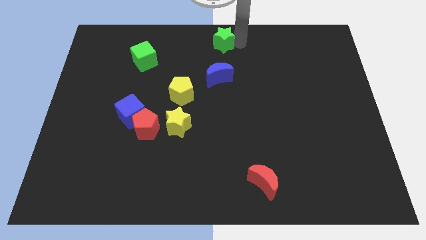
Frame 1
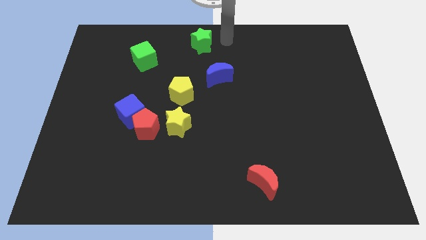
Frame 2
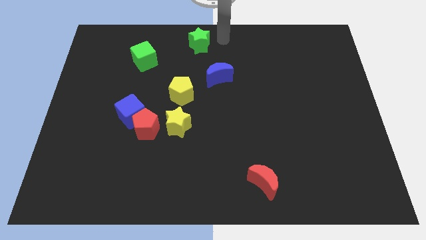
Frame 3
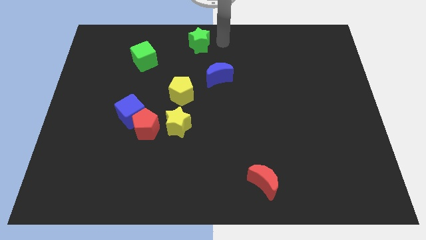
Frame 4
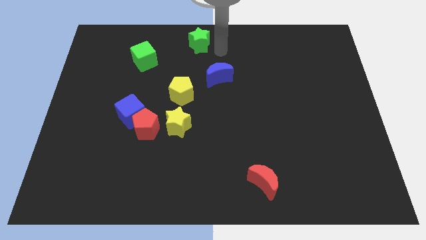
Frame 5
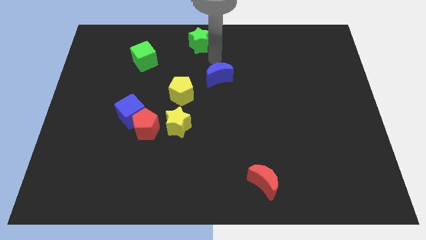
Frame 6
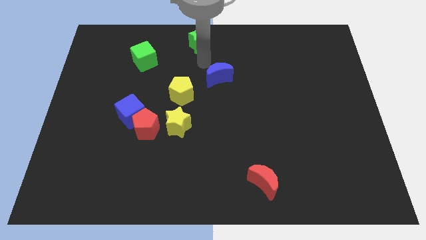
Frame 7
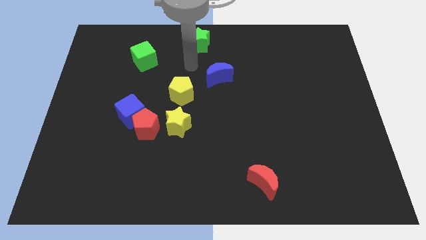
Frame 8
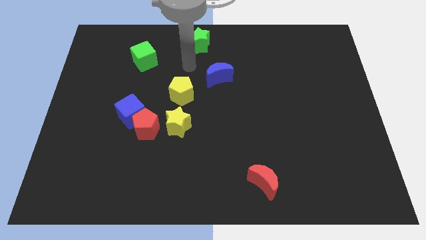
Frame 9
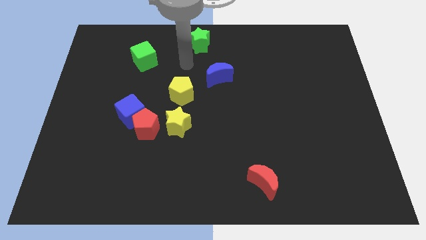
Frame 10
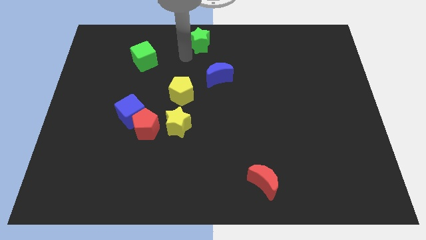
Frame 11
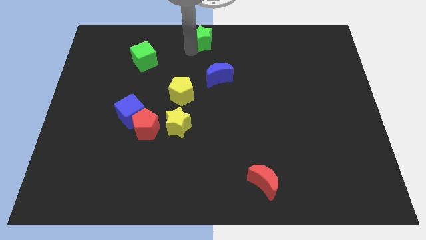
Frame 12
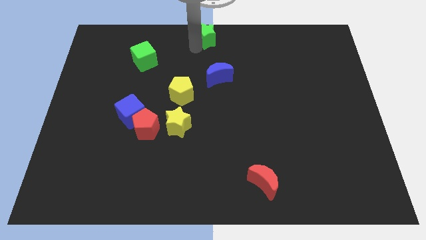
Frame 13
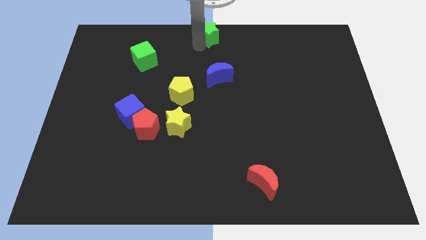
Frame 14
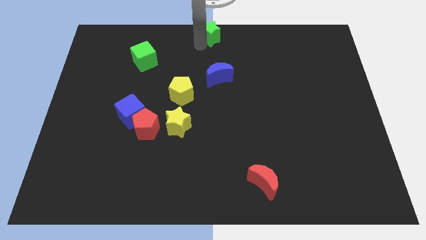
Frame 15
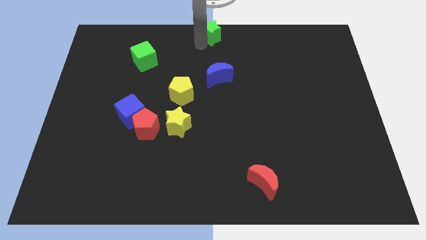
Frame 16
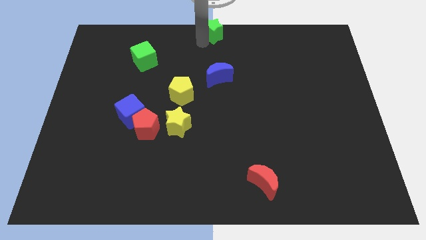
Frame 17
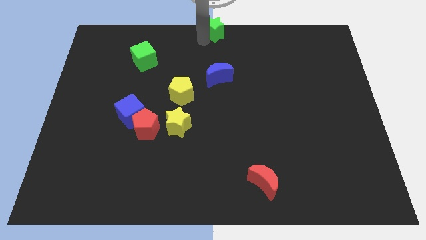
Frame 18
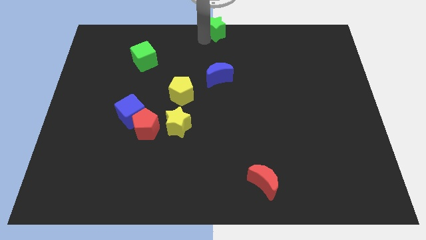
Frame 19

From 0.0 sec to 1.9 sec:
put the green star at the top center of the board

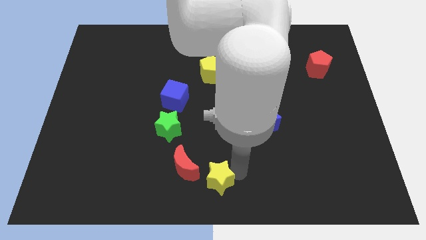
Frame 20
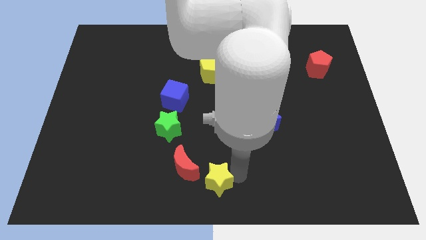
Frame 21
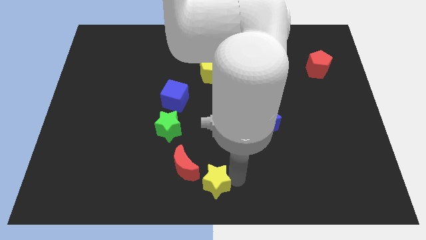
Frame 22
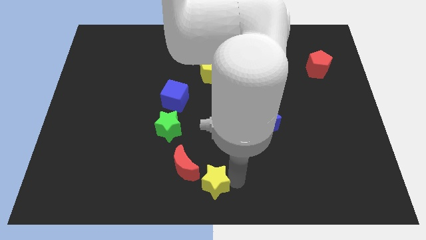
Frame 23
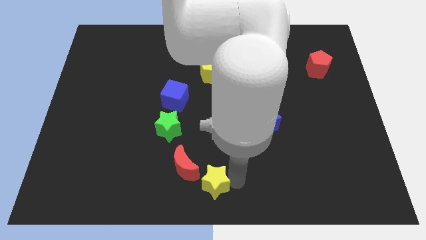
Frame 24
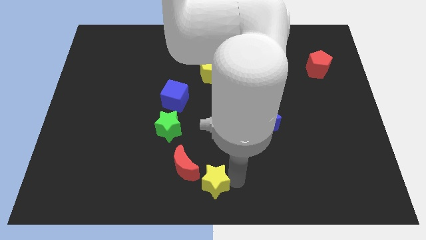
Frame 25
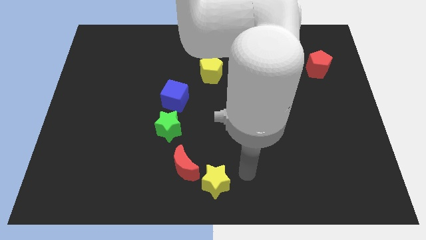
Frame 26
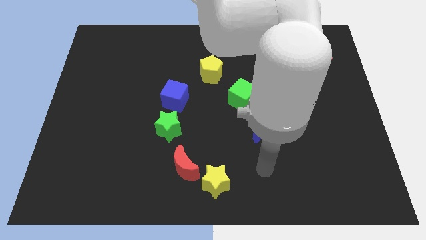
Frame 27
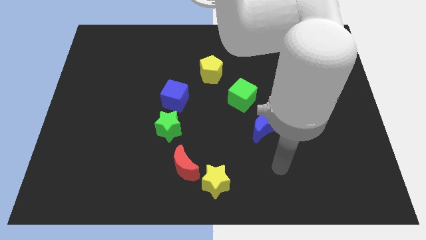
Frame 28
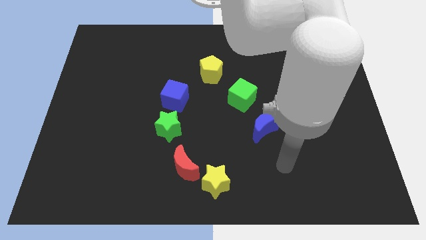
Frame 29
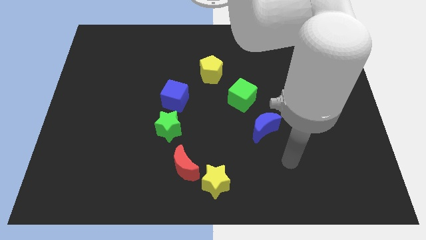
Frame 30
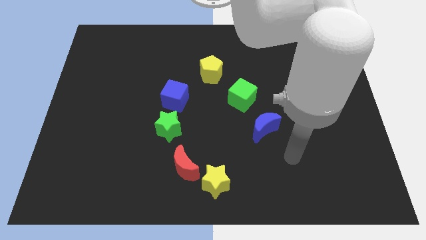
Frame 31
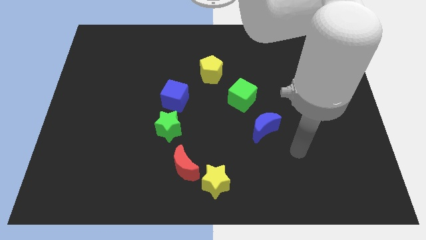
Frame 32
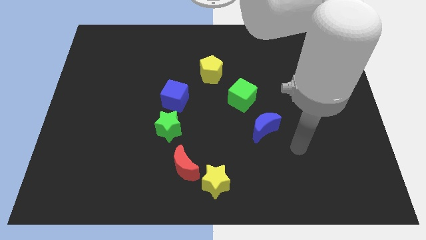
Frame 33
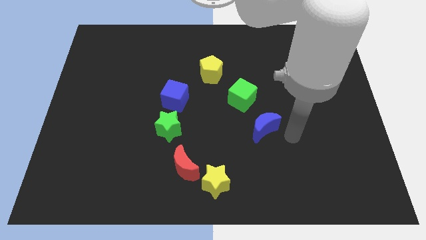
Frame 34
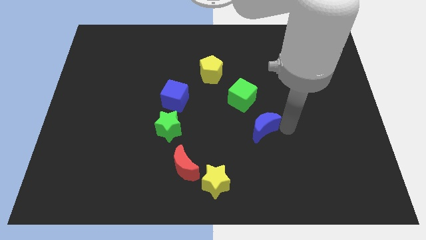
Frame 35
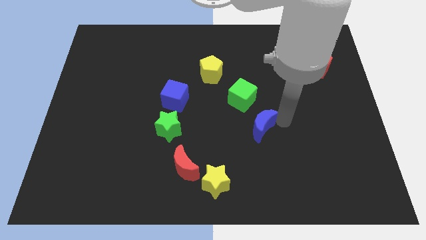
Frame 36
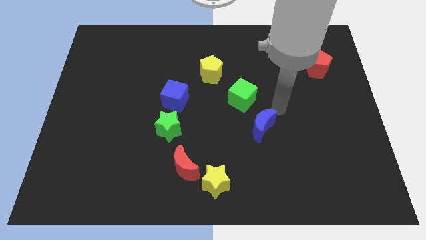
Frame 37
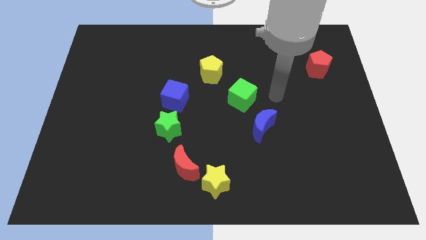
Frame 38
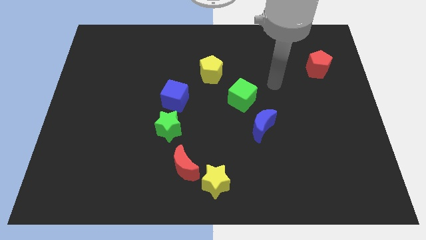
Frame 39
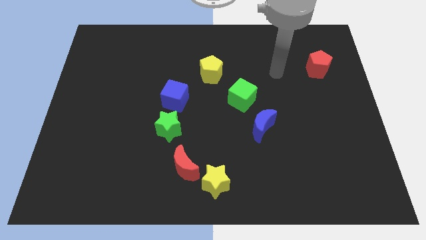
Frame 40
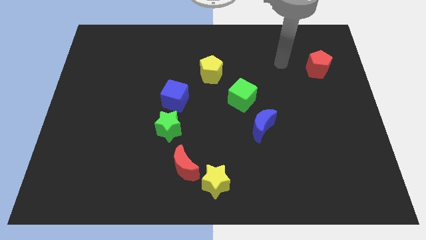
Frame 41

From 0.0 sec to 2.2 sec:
move the pointer to the left of the red pentagon

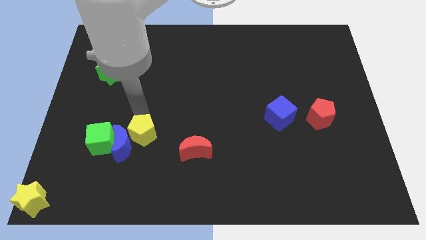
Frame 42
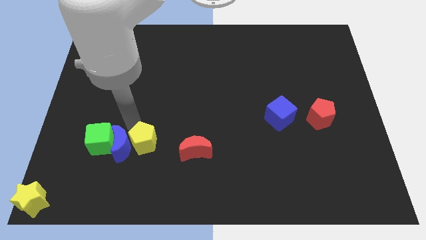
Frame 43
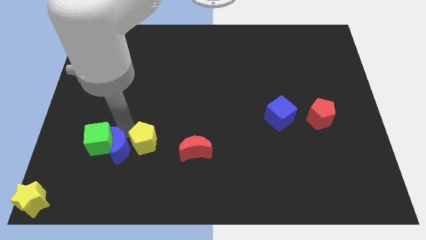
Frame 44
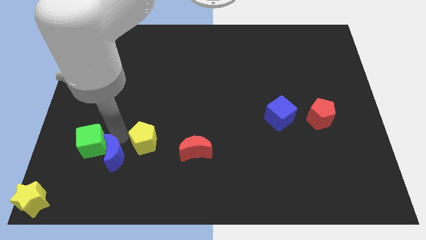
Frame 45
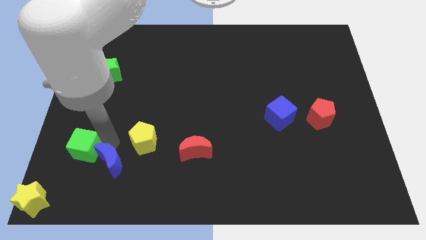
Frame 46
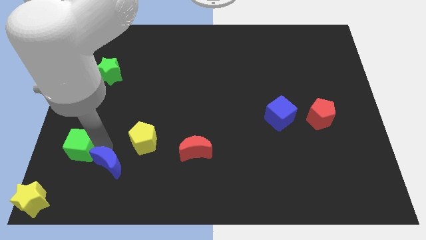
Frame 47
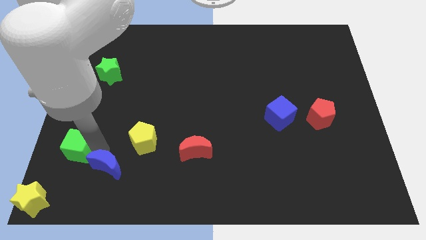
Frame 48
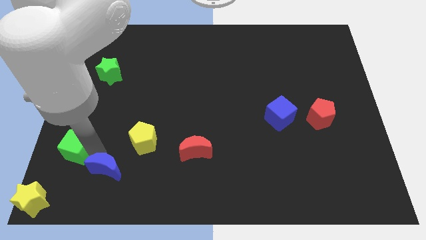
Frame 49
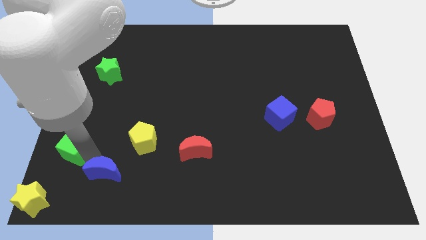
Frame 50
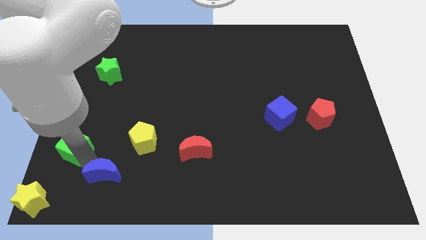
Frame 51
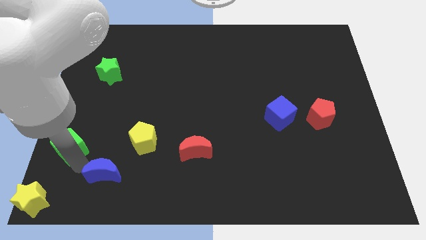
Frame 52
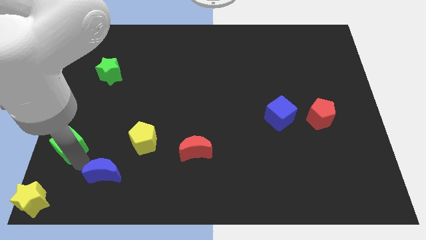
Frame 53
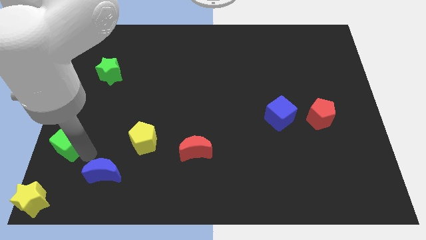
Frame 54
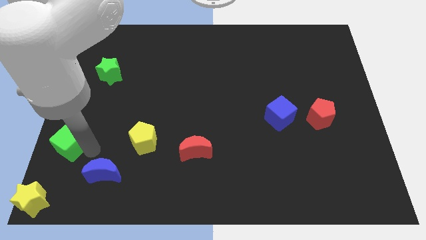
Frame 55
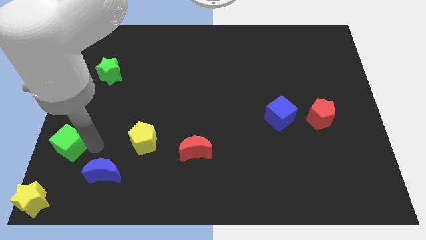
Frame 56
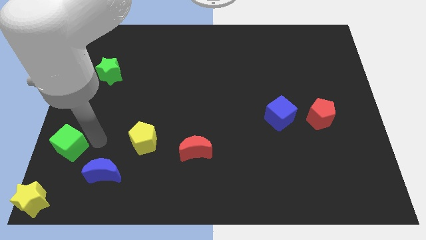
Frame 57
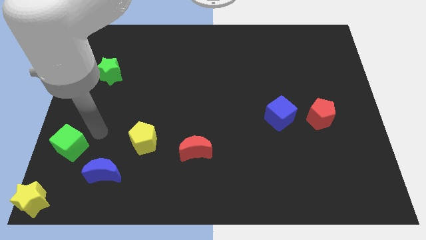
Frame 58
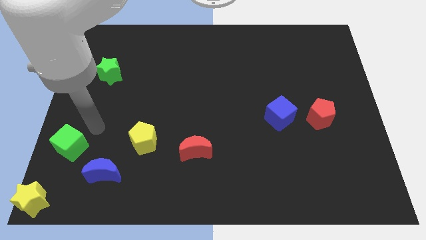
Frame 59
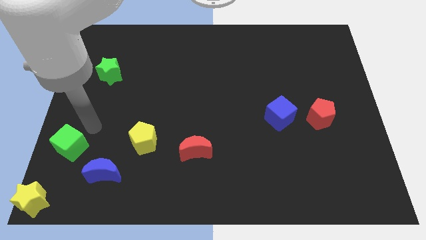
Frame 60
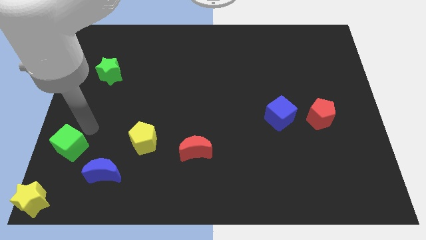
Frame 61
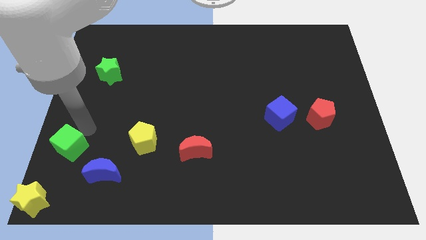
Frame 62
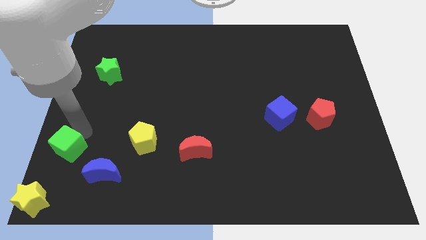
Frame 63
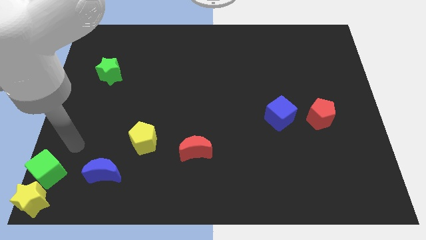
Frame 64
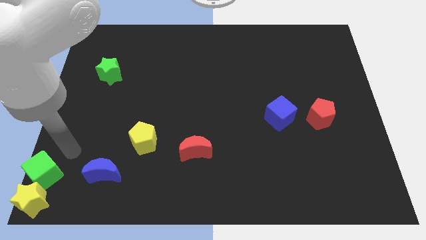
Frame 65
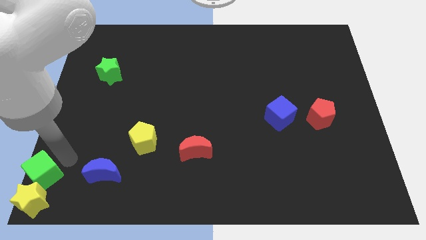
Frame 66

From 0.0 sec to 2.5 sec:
move the green cube into the yellow star

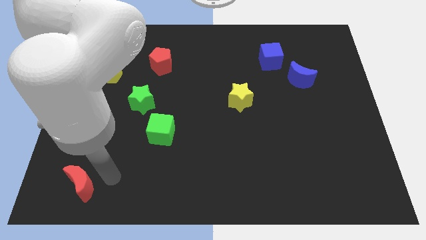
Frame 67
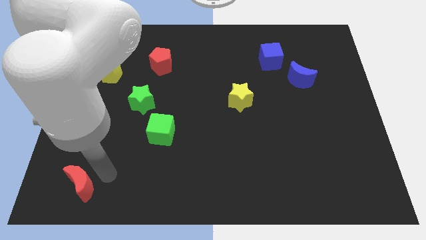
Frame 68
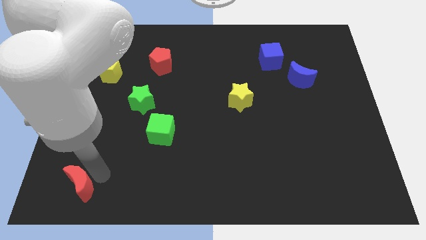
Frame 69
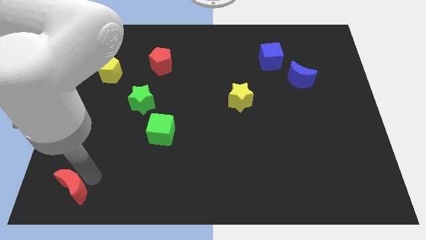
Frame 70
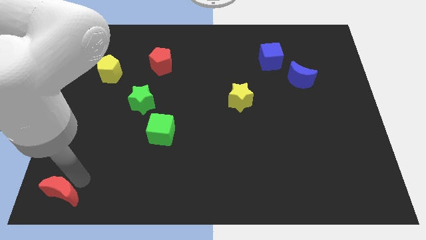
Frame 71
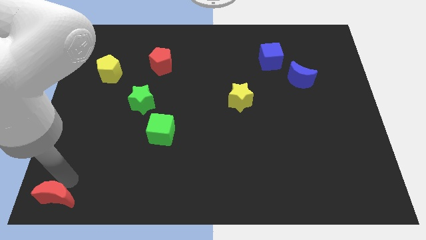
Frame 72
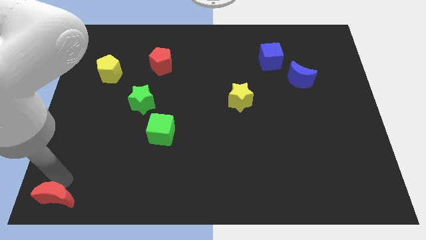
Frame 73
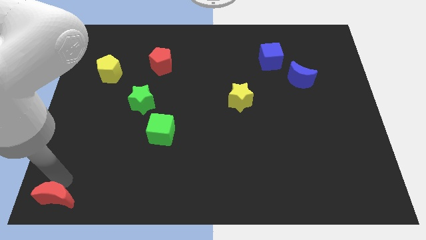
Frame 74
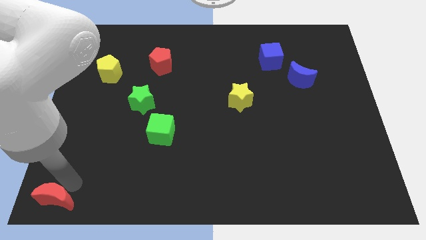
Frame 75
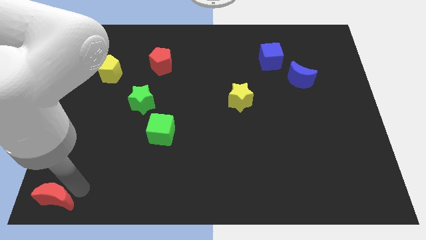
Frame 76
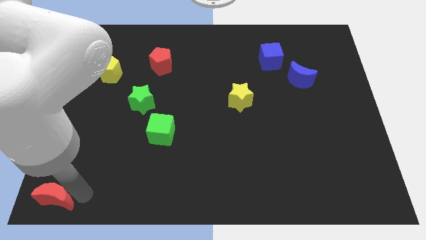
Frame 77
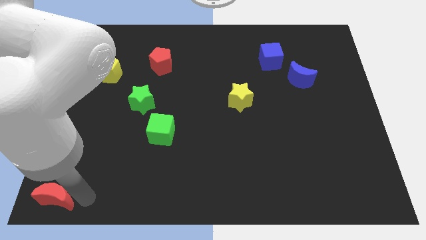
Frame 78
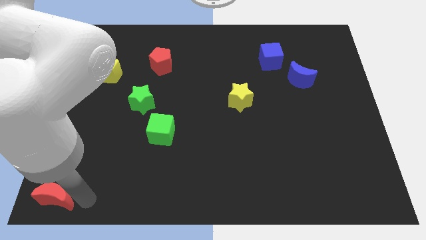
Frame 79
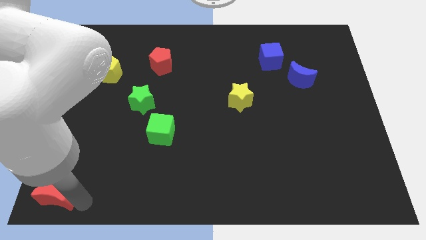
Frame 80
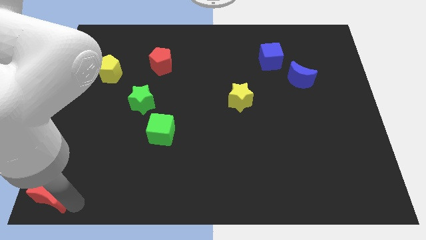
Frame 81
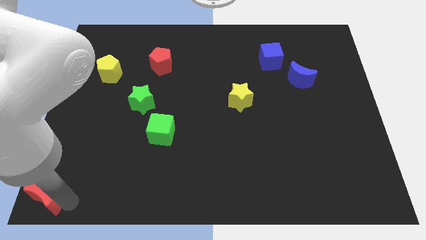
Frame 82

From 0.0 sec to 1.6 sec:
push the red crescent to the bottom left

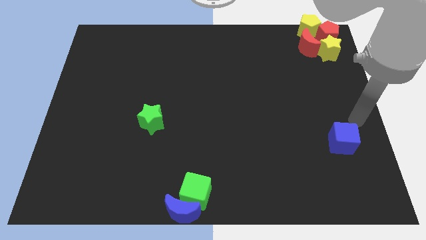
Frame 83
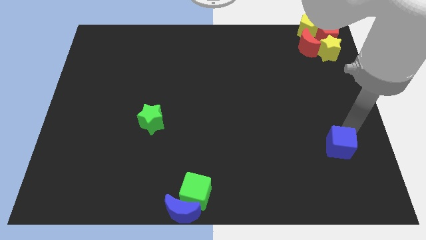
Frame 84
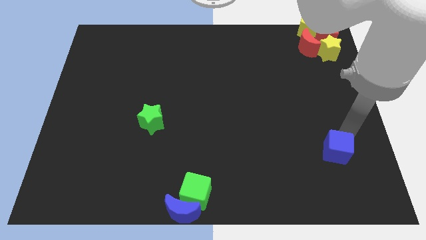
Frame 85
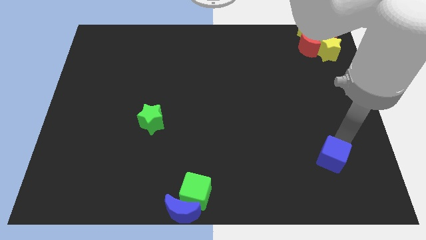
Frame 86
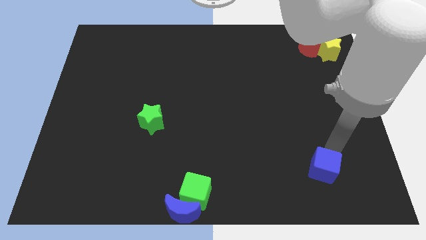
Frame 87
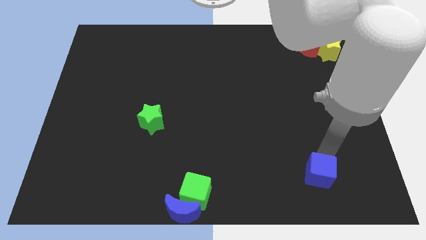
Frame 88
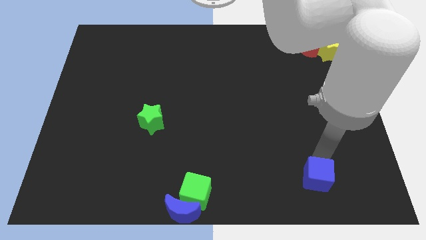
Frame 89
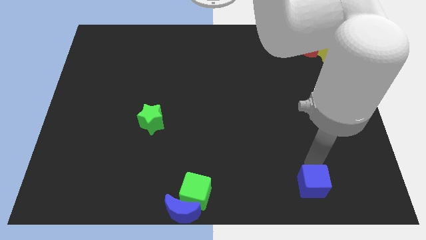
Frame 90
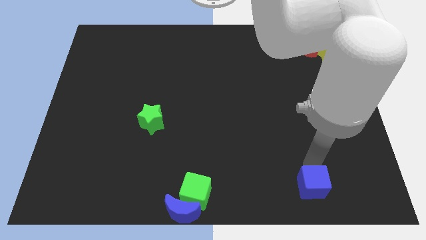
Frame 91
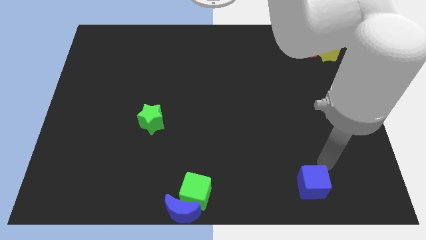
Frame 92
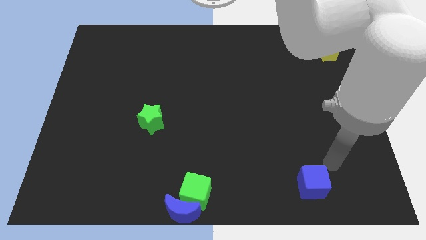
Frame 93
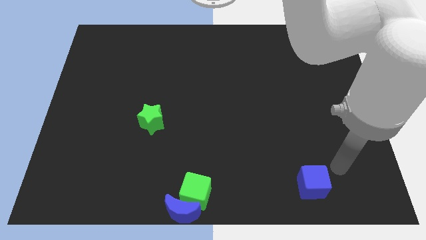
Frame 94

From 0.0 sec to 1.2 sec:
push the blue cube slightly
